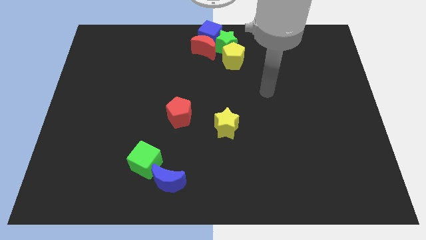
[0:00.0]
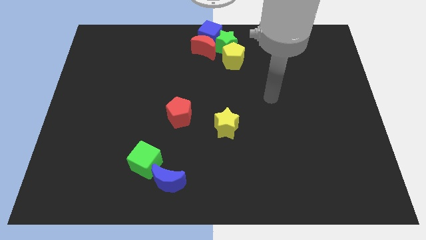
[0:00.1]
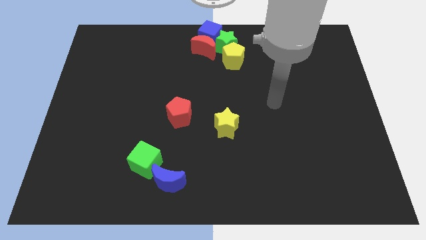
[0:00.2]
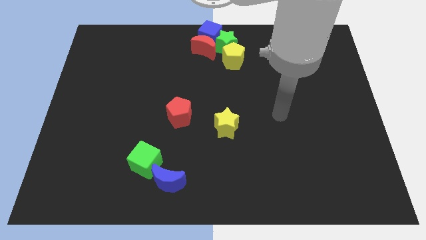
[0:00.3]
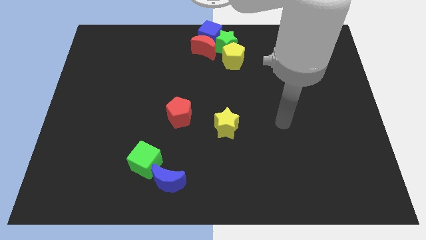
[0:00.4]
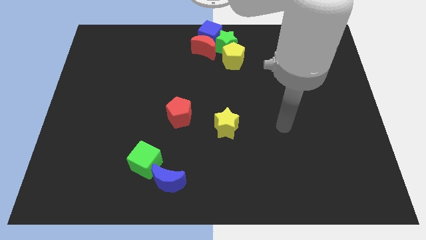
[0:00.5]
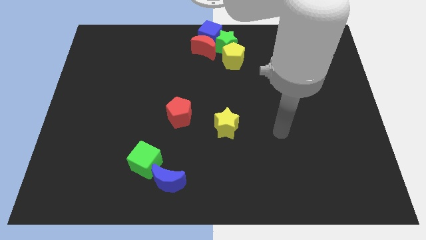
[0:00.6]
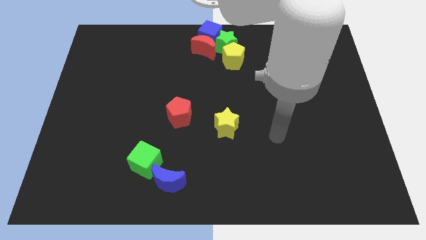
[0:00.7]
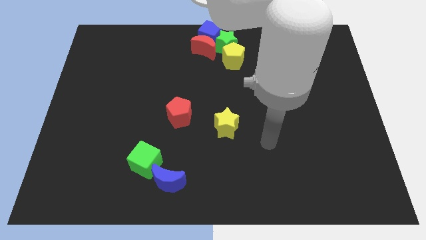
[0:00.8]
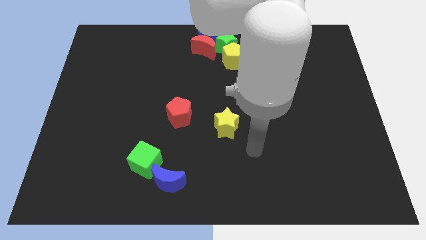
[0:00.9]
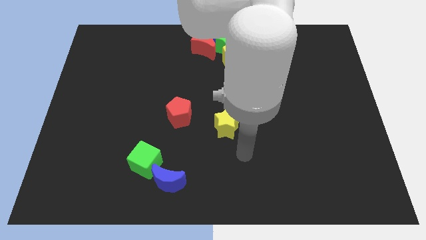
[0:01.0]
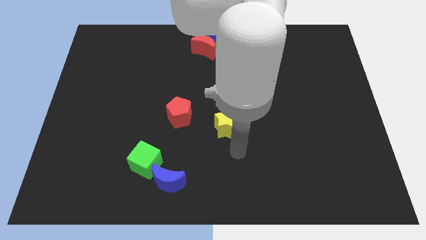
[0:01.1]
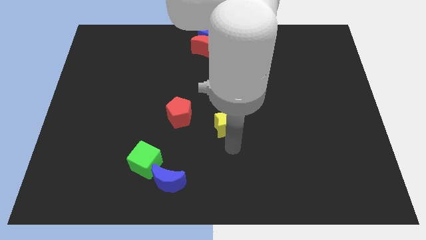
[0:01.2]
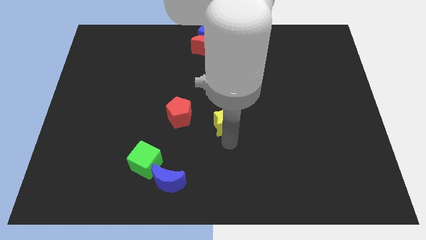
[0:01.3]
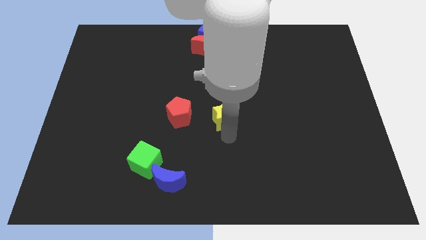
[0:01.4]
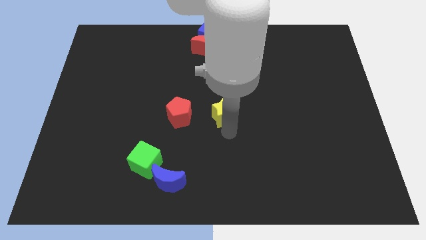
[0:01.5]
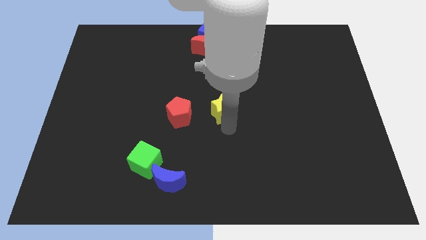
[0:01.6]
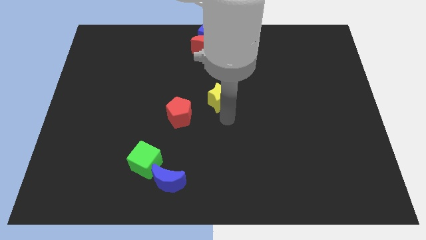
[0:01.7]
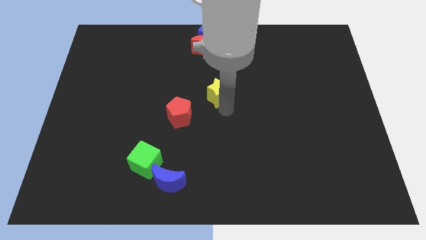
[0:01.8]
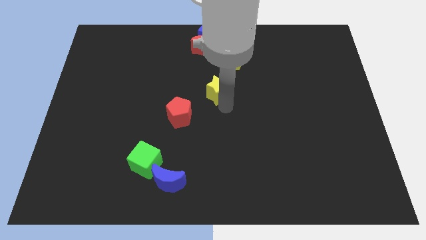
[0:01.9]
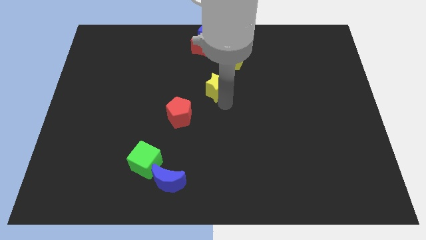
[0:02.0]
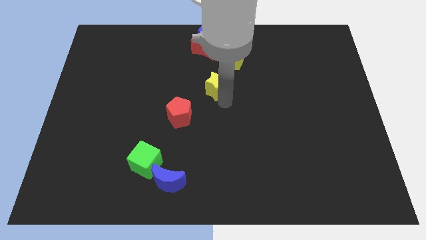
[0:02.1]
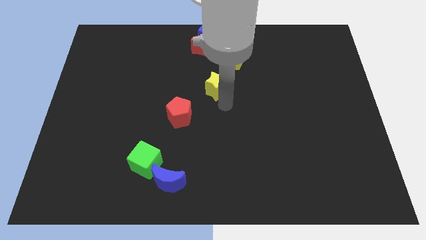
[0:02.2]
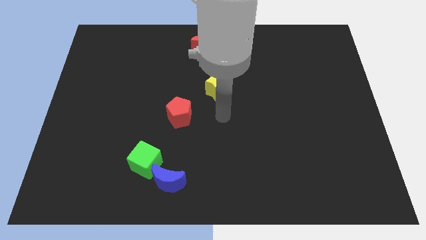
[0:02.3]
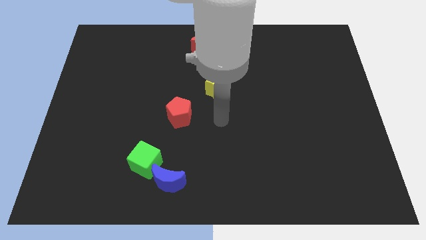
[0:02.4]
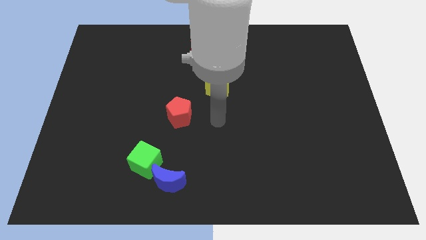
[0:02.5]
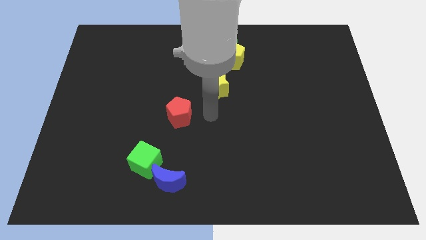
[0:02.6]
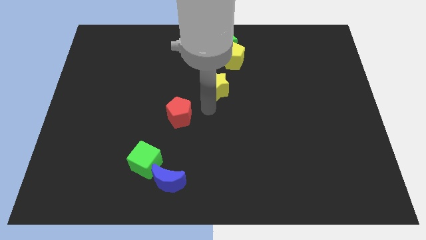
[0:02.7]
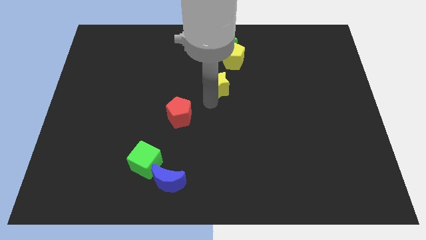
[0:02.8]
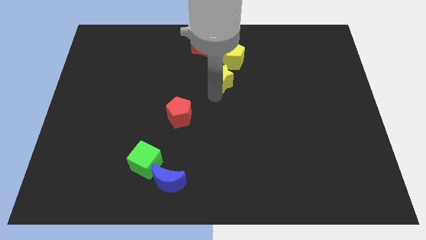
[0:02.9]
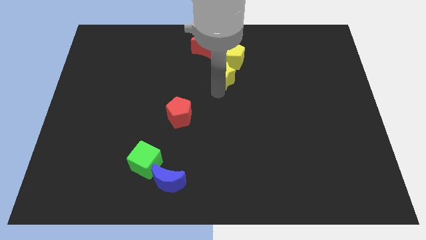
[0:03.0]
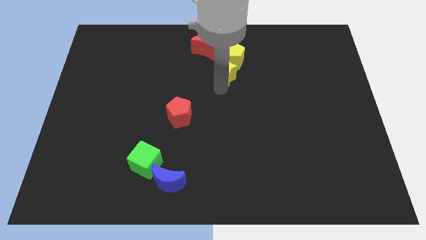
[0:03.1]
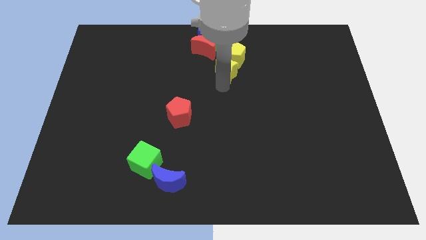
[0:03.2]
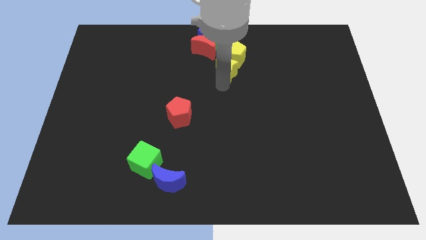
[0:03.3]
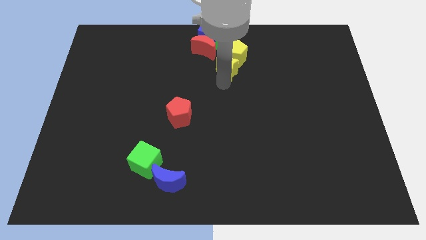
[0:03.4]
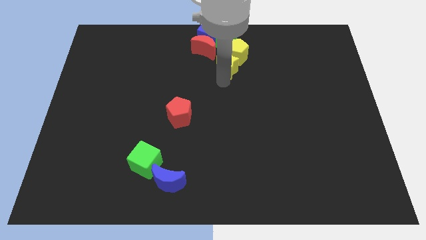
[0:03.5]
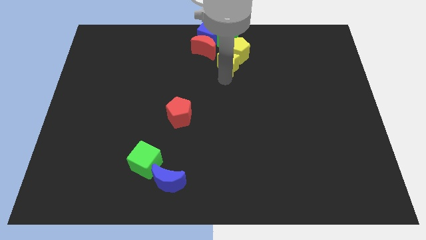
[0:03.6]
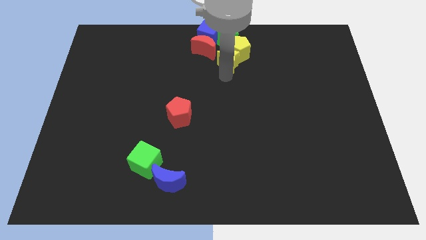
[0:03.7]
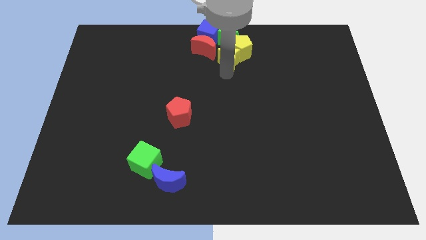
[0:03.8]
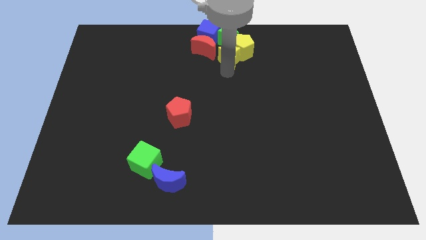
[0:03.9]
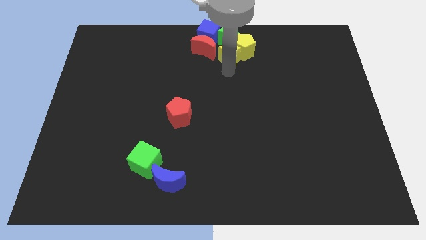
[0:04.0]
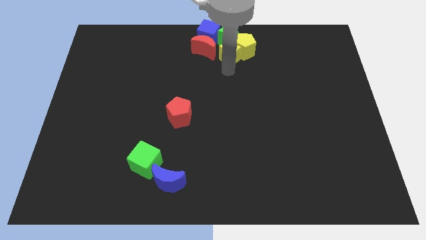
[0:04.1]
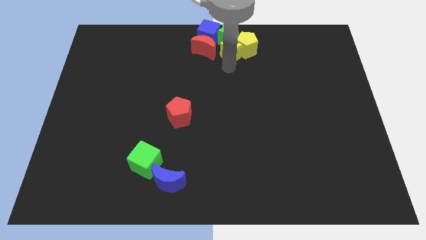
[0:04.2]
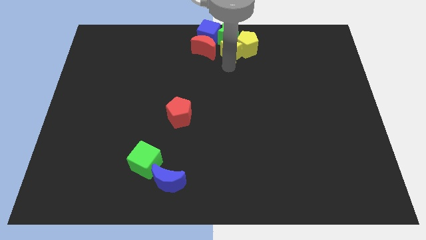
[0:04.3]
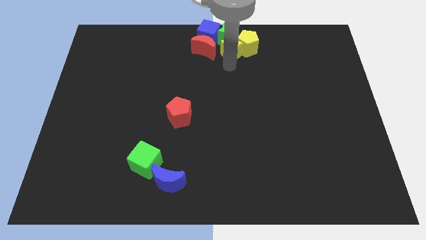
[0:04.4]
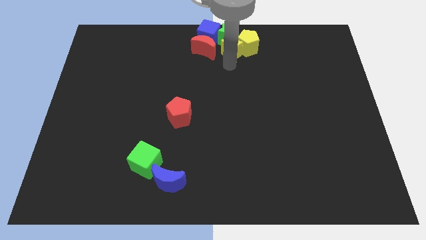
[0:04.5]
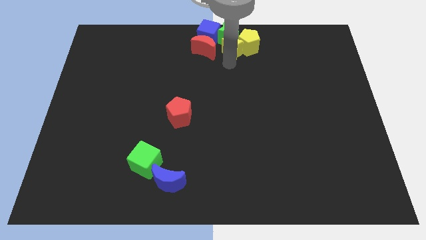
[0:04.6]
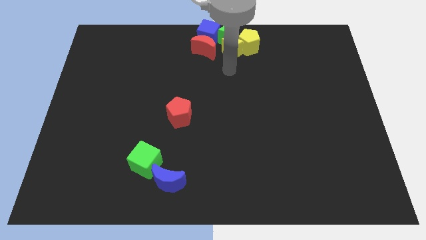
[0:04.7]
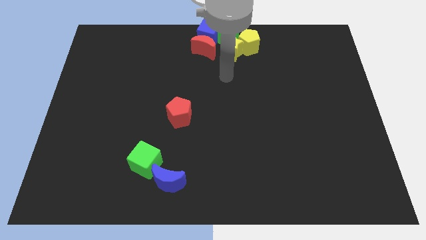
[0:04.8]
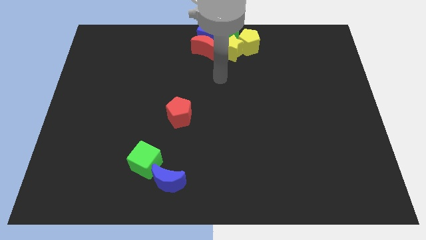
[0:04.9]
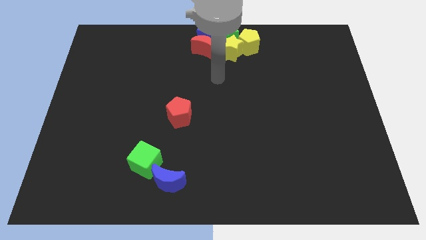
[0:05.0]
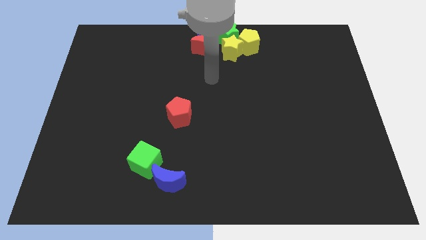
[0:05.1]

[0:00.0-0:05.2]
push the yellow star into the yellow pentagon

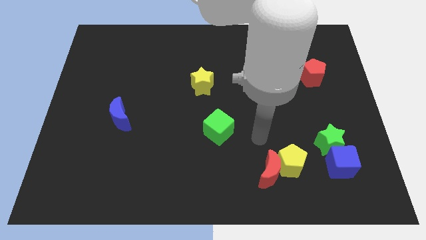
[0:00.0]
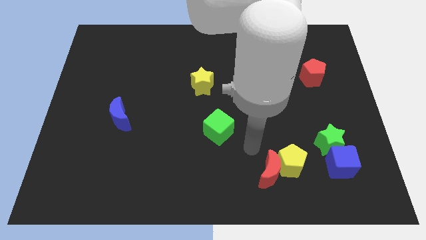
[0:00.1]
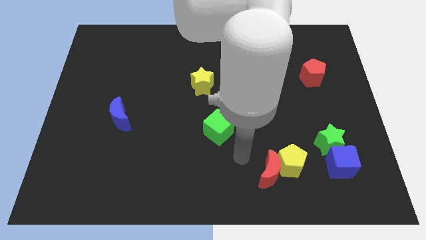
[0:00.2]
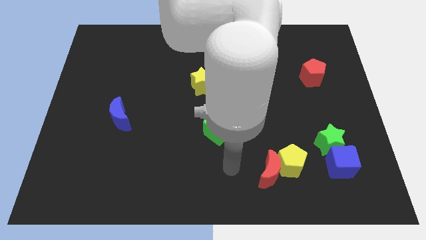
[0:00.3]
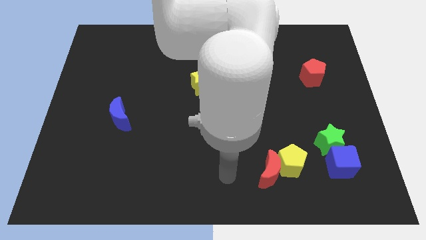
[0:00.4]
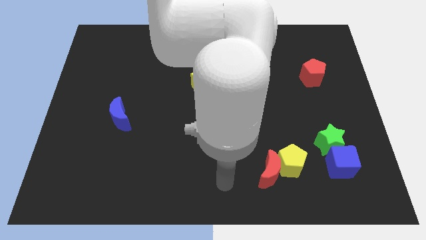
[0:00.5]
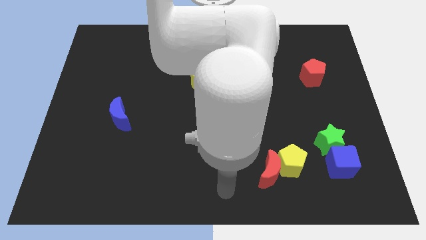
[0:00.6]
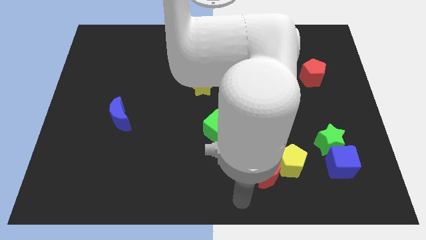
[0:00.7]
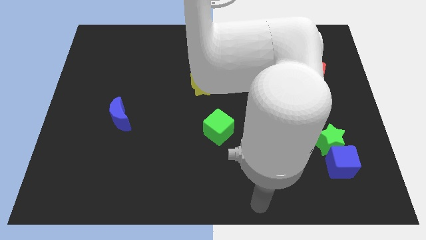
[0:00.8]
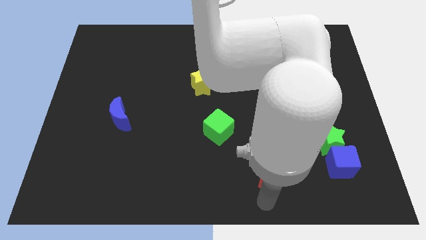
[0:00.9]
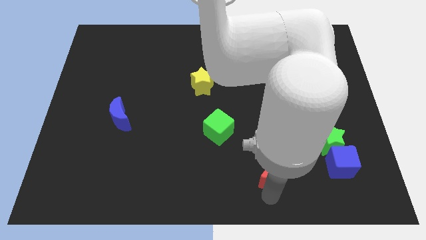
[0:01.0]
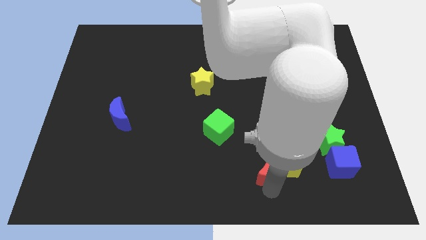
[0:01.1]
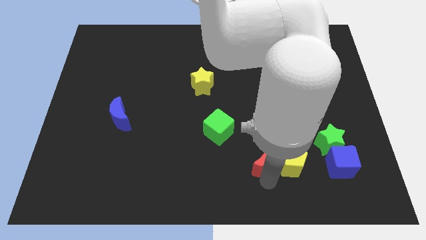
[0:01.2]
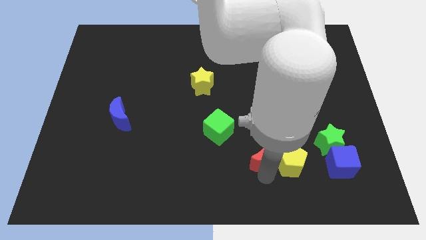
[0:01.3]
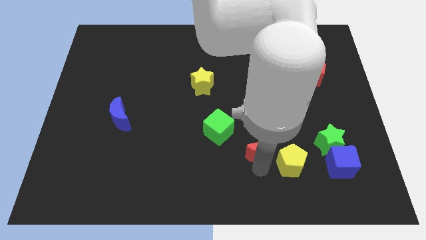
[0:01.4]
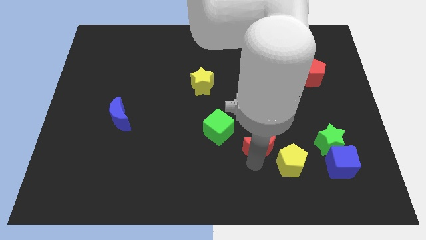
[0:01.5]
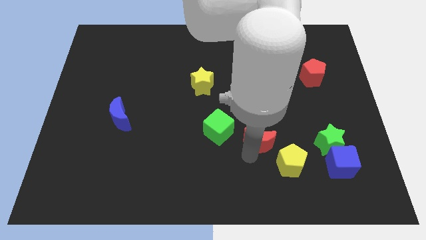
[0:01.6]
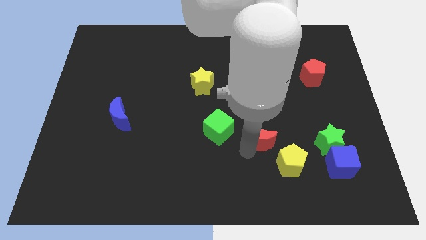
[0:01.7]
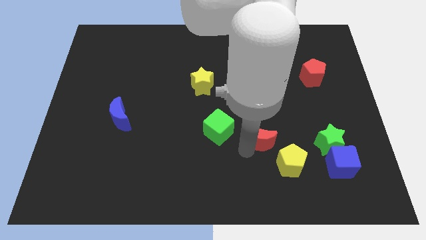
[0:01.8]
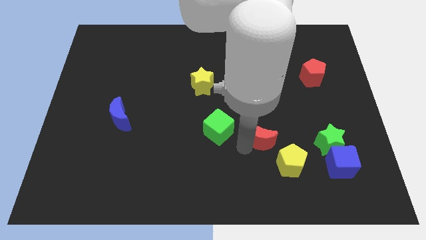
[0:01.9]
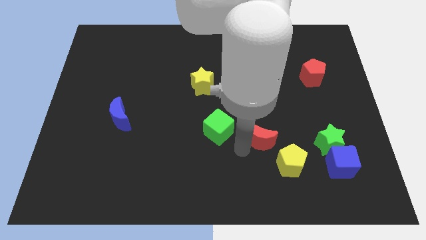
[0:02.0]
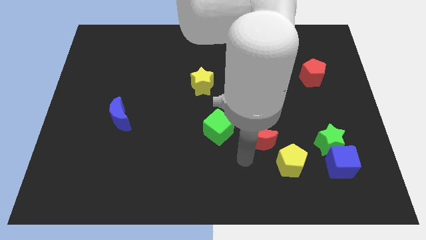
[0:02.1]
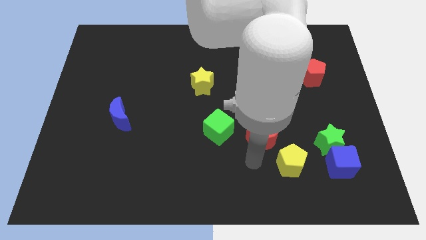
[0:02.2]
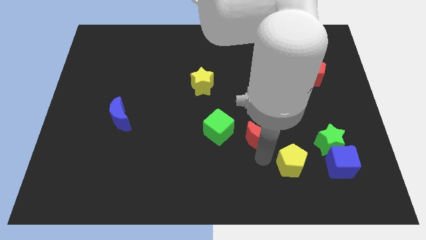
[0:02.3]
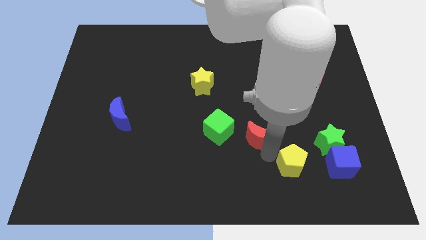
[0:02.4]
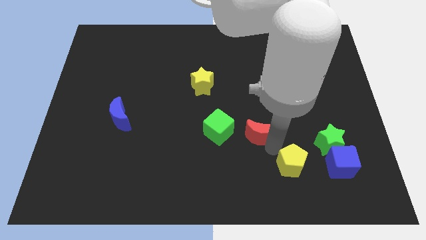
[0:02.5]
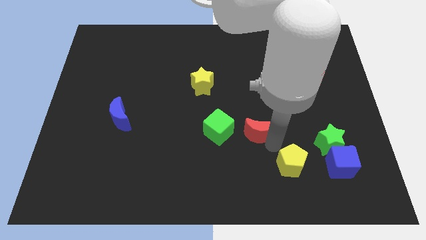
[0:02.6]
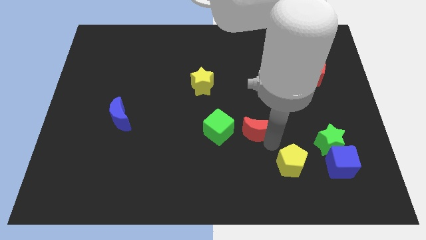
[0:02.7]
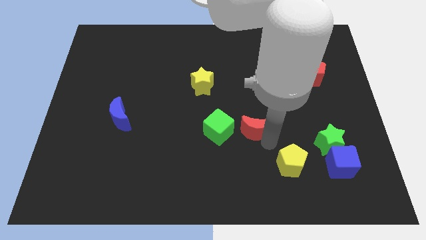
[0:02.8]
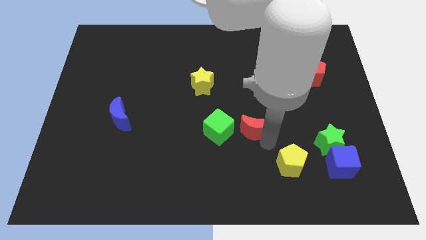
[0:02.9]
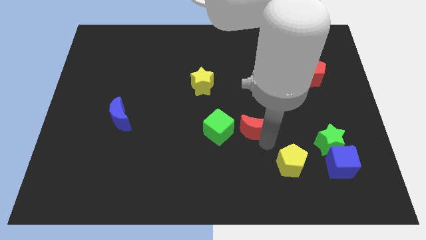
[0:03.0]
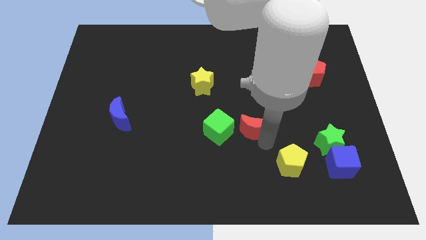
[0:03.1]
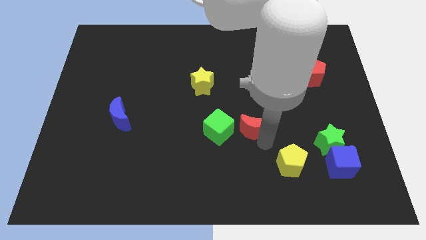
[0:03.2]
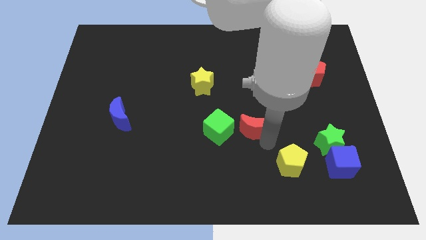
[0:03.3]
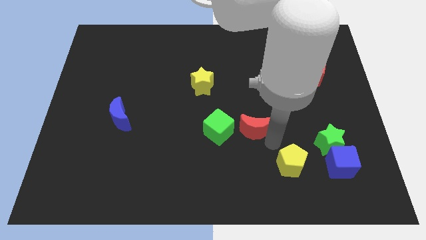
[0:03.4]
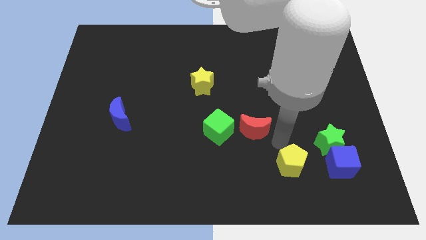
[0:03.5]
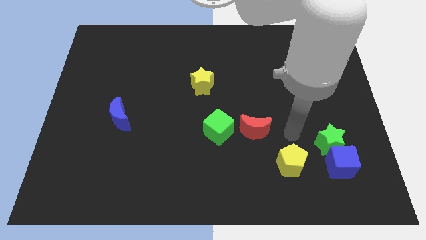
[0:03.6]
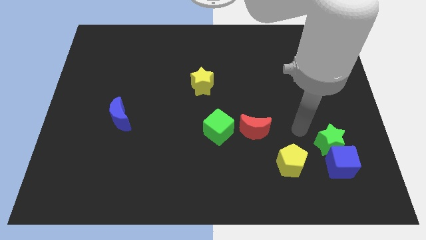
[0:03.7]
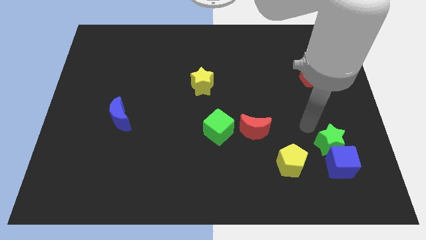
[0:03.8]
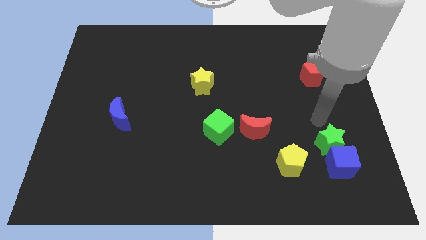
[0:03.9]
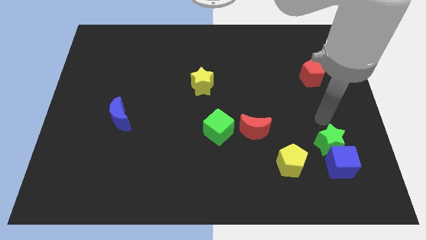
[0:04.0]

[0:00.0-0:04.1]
move red moon into green cube
